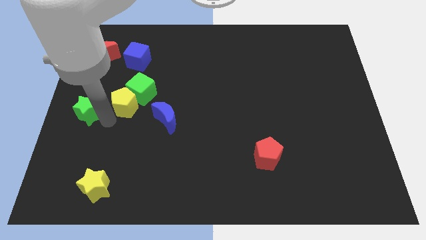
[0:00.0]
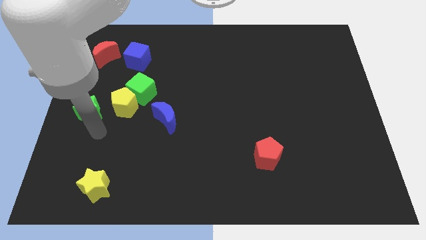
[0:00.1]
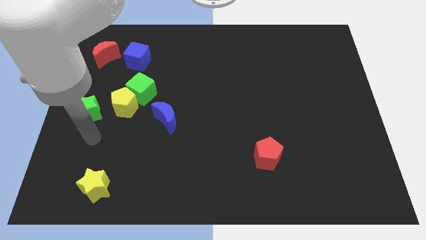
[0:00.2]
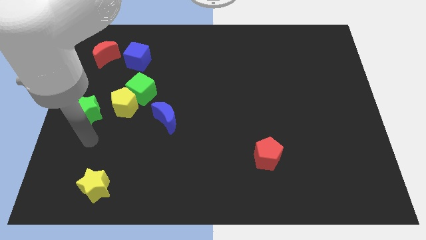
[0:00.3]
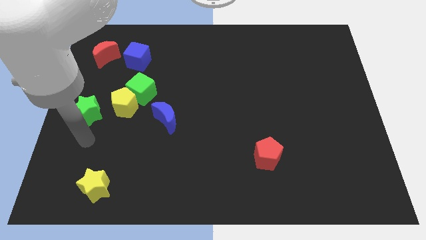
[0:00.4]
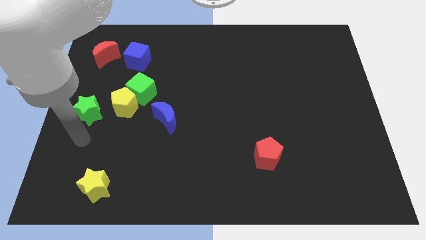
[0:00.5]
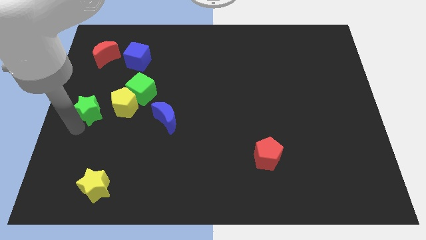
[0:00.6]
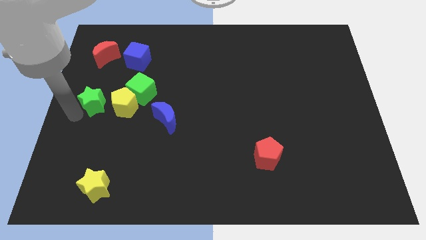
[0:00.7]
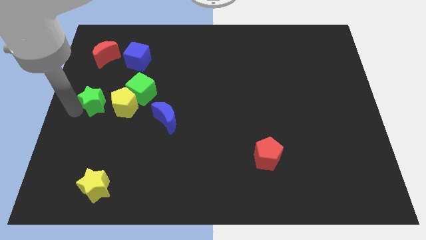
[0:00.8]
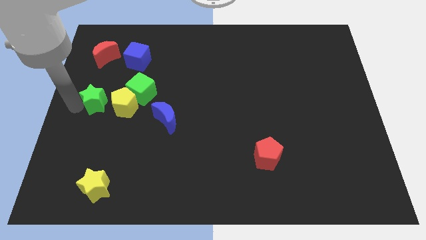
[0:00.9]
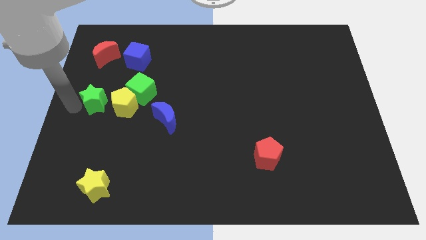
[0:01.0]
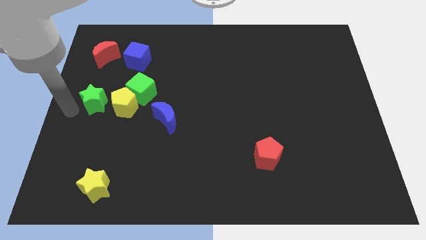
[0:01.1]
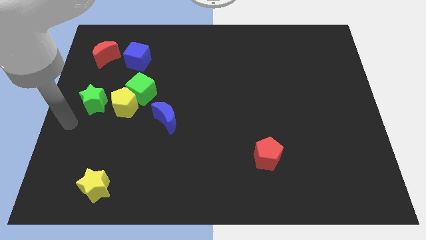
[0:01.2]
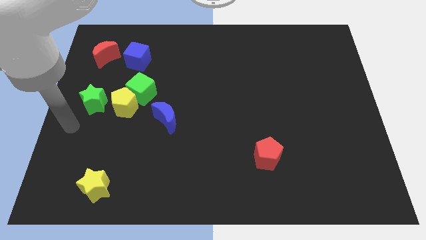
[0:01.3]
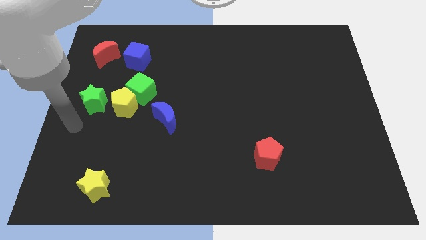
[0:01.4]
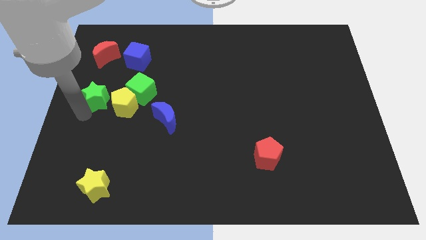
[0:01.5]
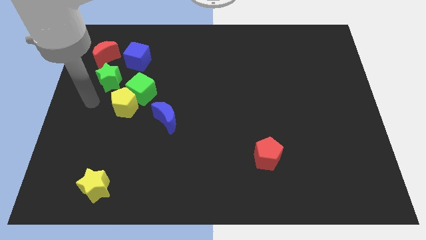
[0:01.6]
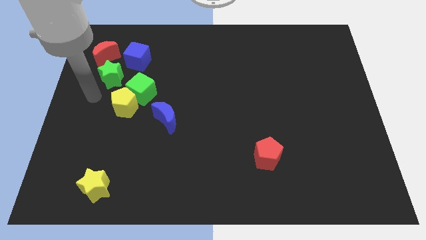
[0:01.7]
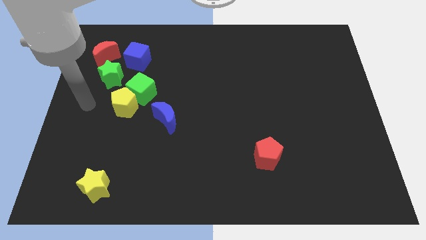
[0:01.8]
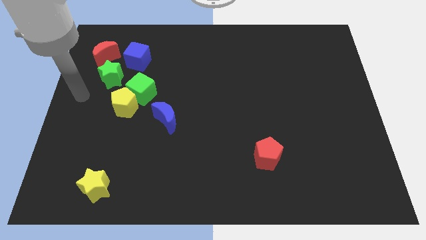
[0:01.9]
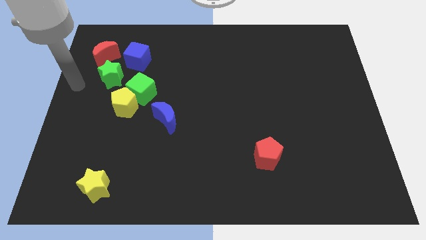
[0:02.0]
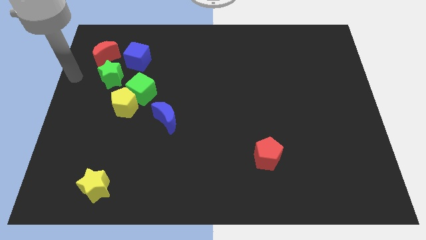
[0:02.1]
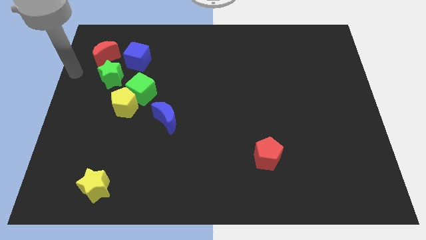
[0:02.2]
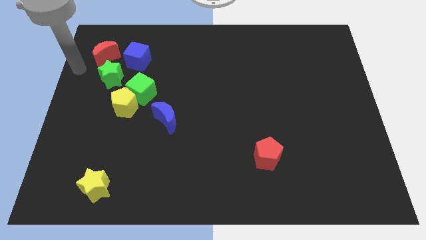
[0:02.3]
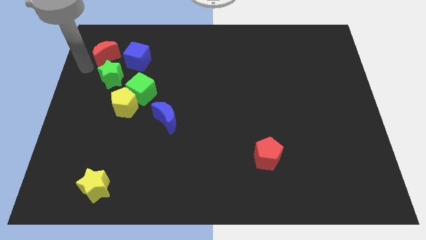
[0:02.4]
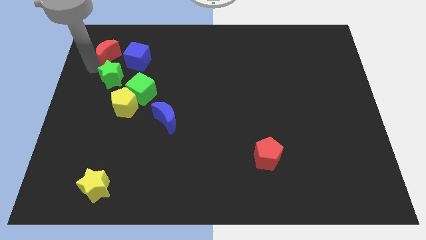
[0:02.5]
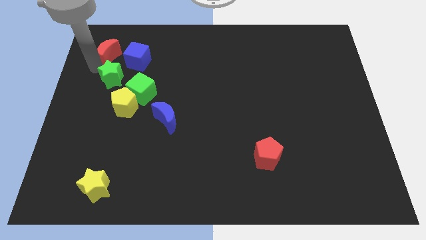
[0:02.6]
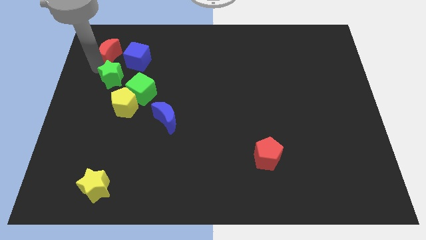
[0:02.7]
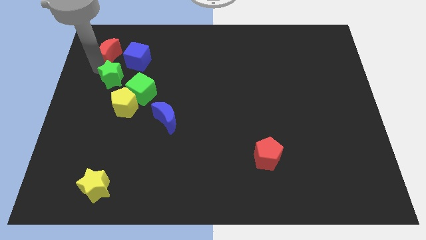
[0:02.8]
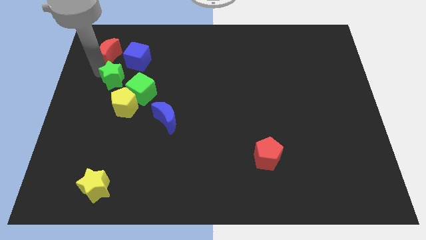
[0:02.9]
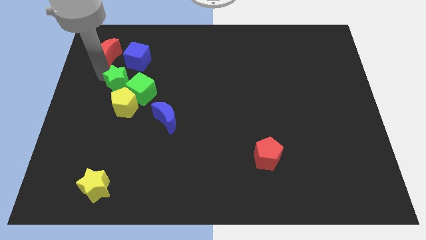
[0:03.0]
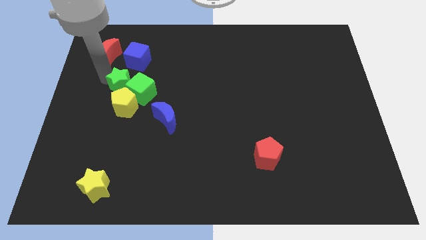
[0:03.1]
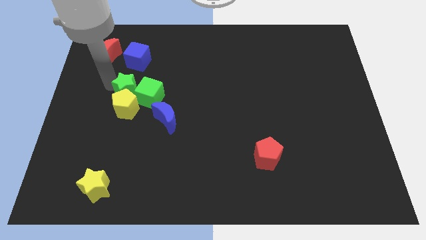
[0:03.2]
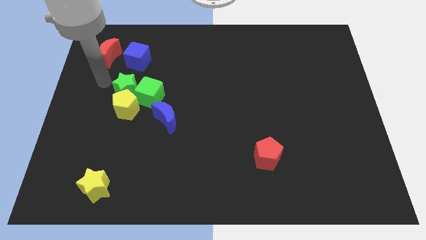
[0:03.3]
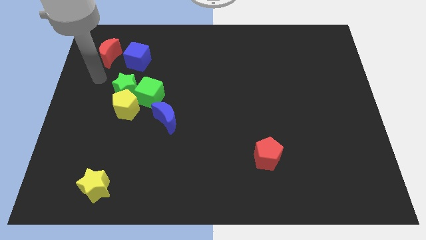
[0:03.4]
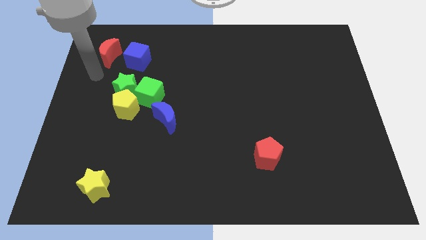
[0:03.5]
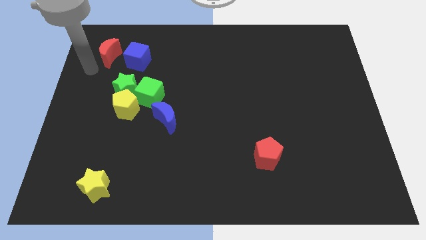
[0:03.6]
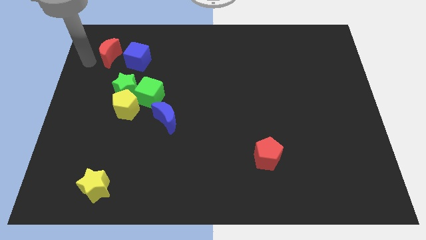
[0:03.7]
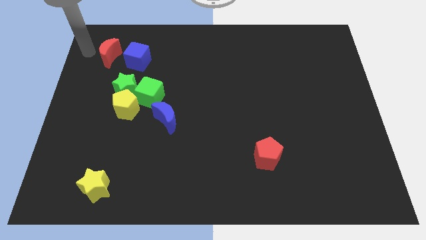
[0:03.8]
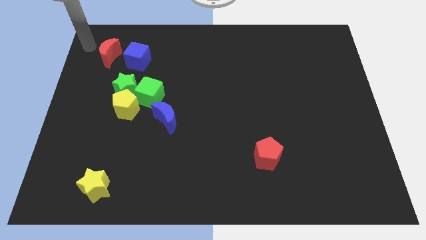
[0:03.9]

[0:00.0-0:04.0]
push the green star into the yellow pentagon and the green cube

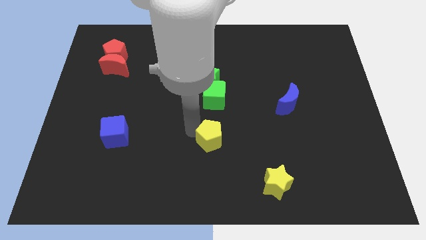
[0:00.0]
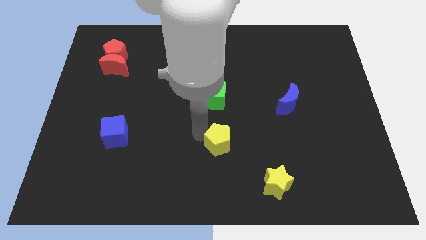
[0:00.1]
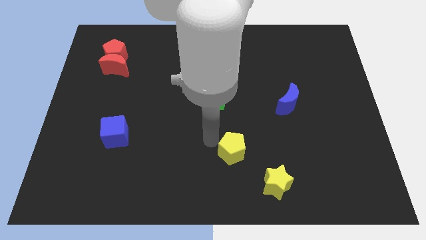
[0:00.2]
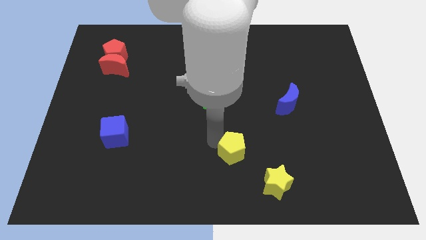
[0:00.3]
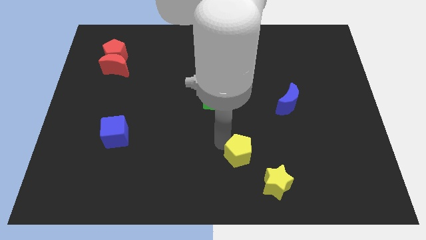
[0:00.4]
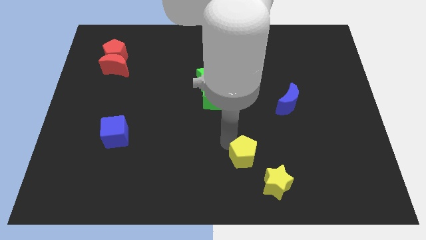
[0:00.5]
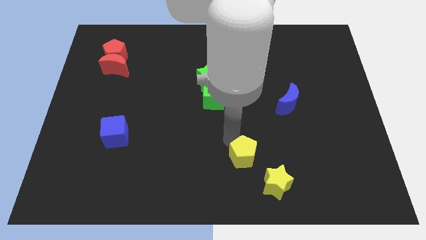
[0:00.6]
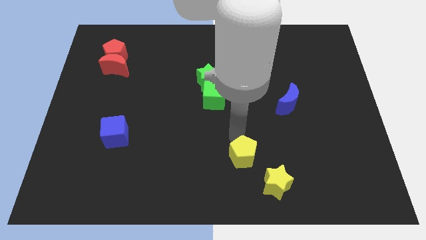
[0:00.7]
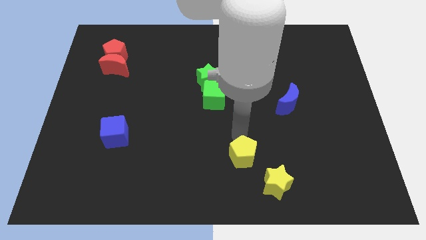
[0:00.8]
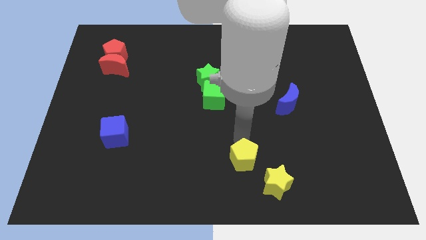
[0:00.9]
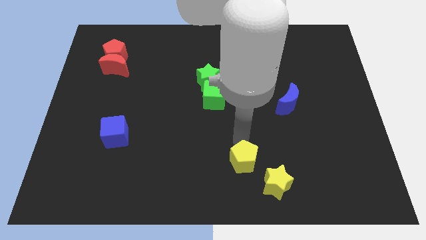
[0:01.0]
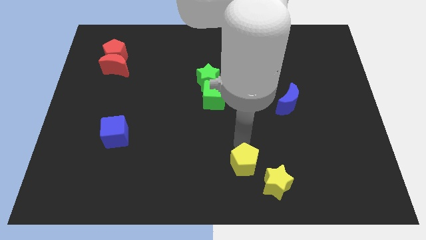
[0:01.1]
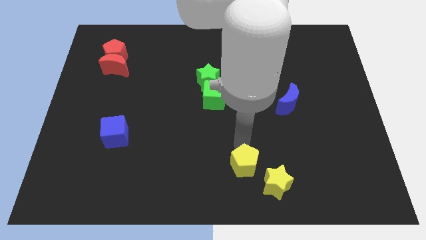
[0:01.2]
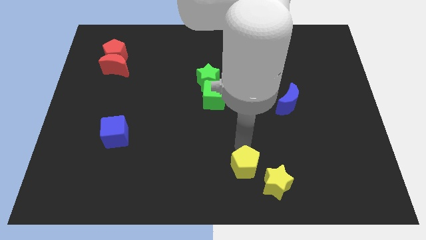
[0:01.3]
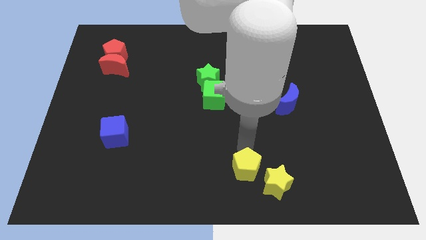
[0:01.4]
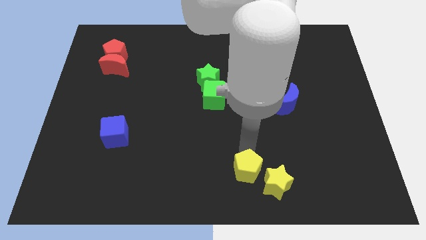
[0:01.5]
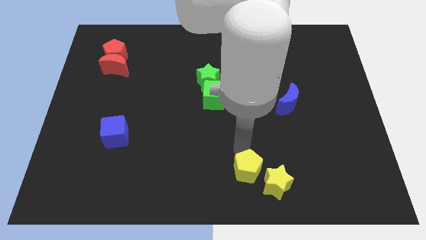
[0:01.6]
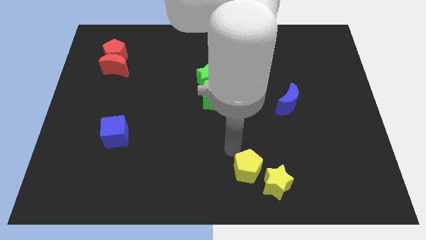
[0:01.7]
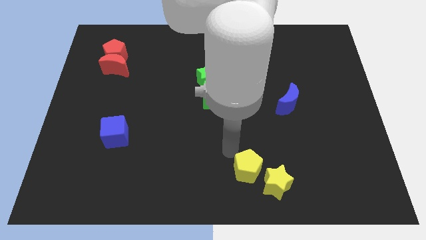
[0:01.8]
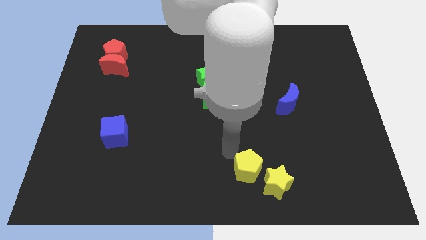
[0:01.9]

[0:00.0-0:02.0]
move yellow pentagon close to the yellow star

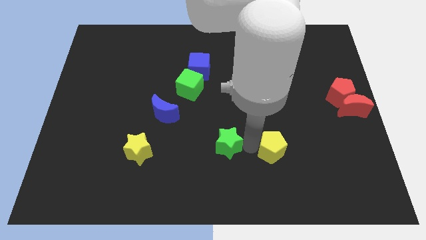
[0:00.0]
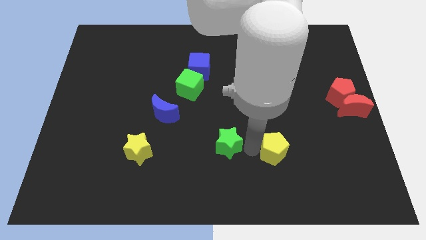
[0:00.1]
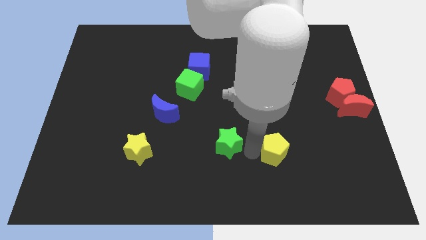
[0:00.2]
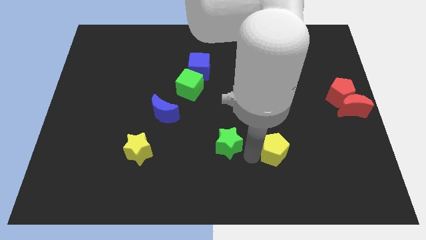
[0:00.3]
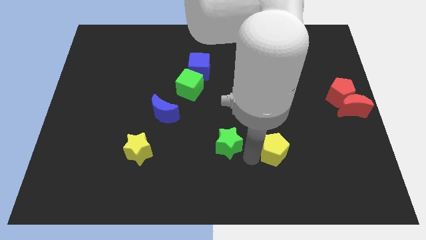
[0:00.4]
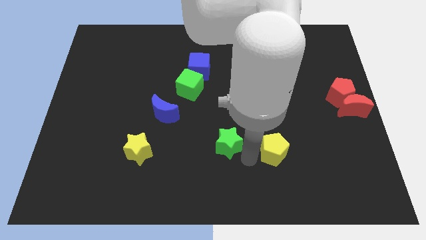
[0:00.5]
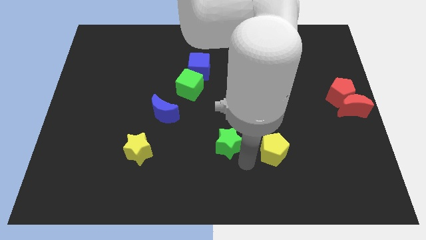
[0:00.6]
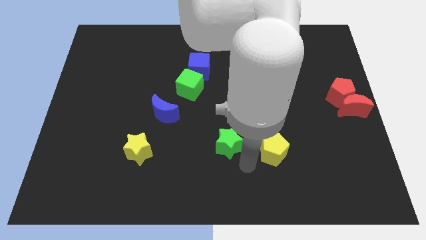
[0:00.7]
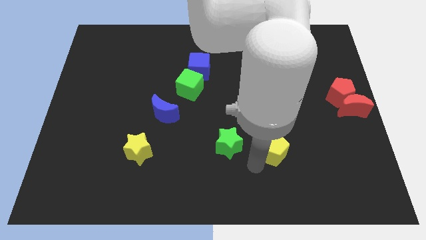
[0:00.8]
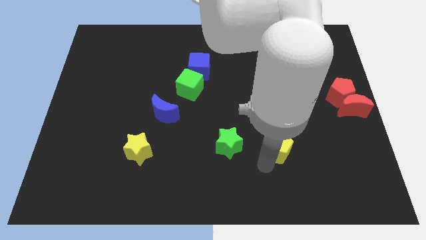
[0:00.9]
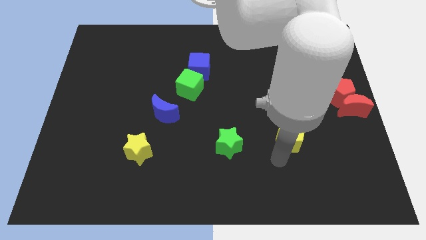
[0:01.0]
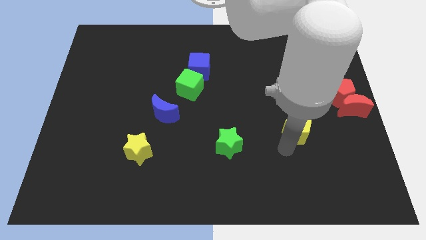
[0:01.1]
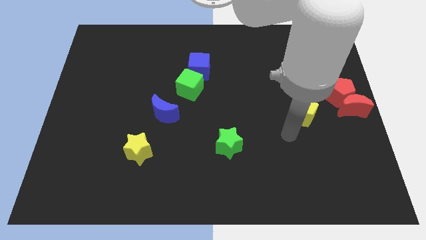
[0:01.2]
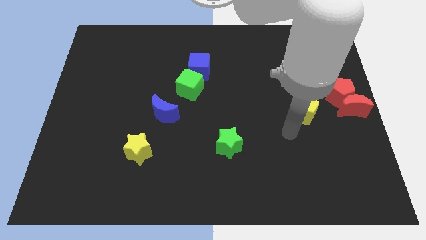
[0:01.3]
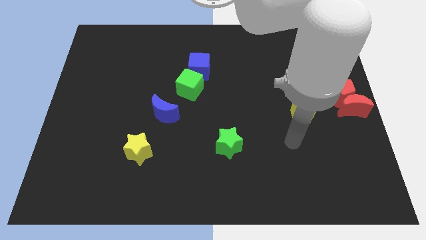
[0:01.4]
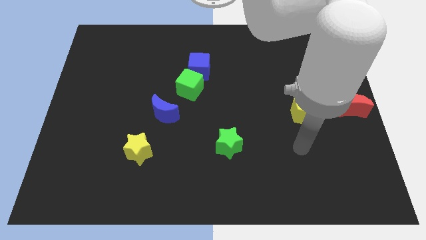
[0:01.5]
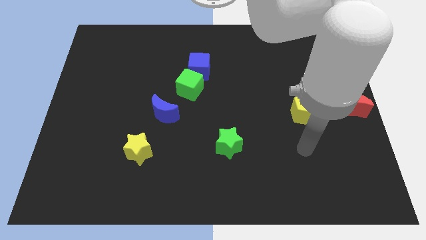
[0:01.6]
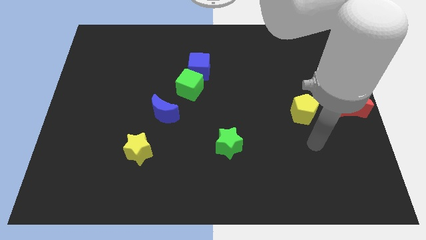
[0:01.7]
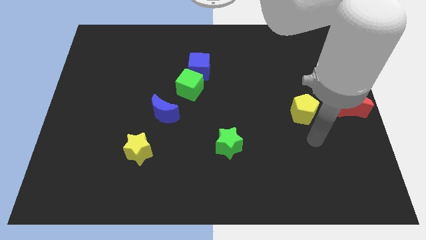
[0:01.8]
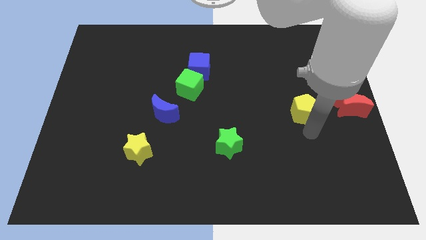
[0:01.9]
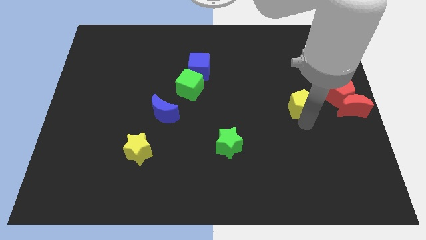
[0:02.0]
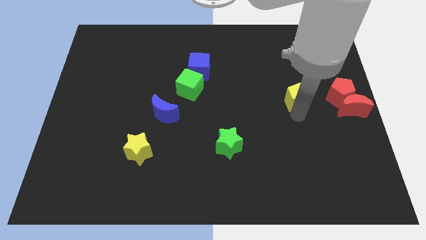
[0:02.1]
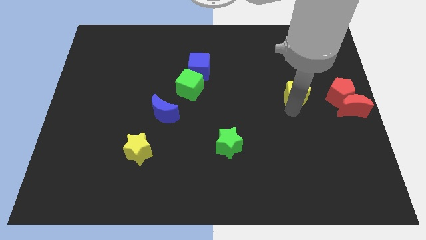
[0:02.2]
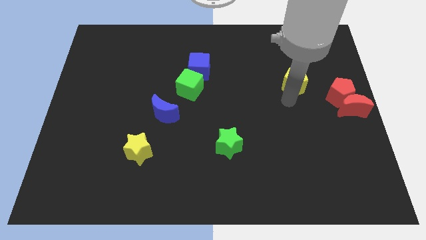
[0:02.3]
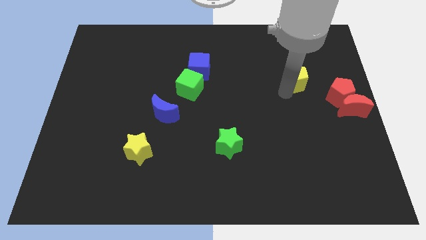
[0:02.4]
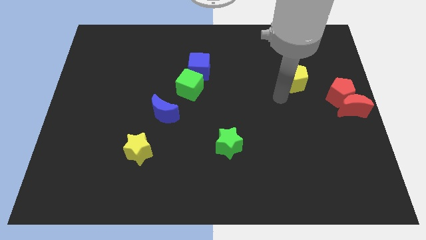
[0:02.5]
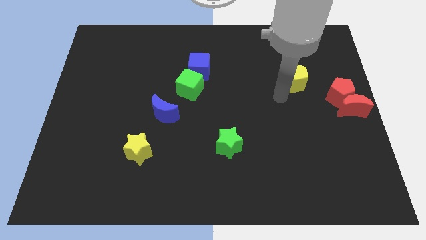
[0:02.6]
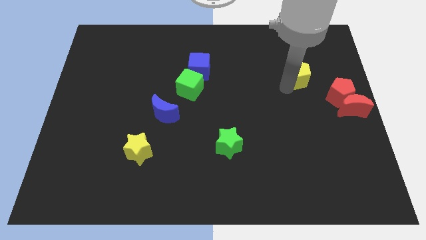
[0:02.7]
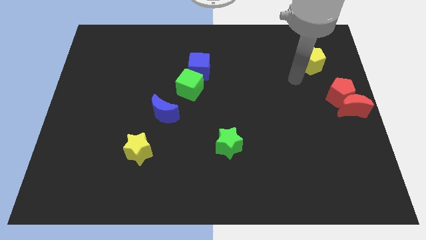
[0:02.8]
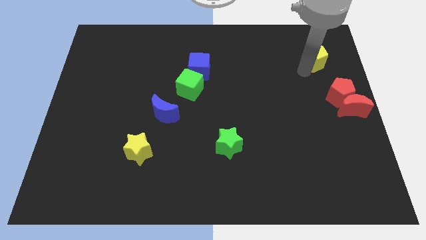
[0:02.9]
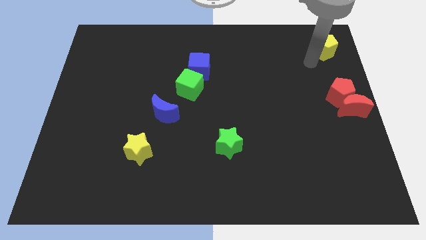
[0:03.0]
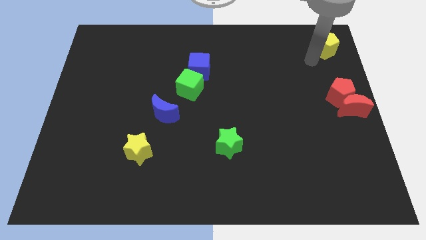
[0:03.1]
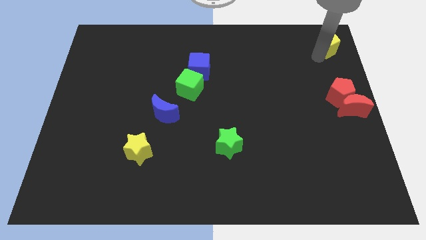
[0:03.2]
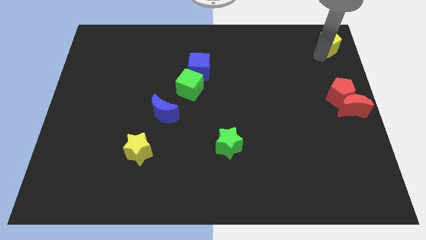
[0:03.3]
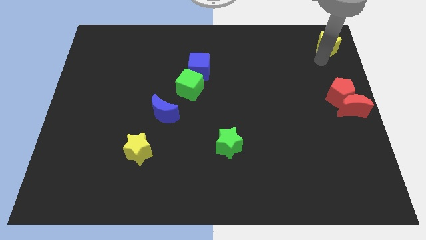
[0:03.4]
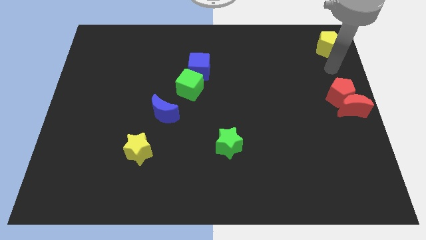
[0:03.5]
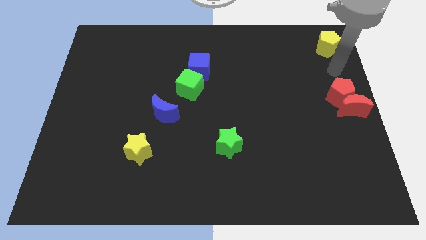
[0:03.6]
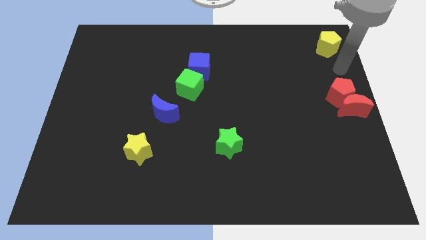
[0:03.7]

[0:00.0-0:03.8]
push yellow pentagon diagonally upwards
